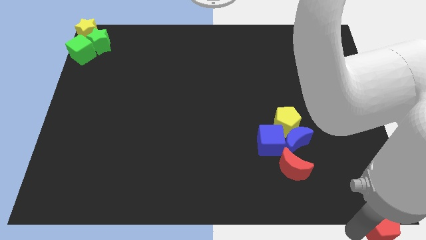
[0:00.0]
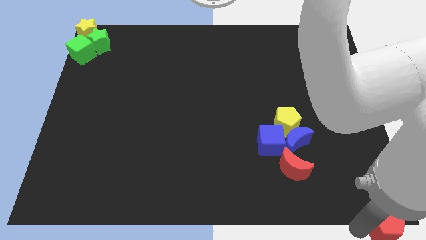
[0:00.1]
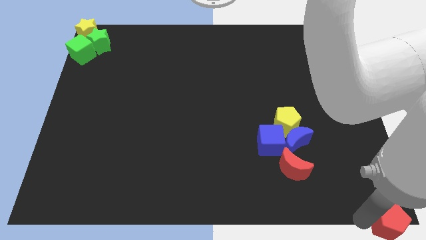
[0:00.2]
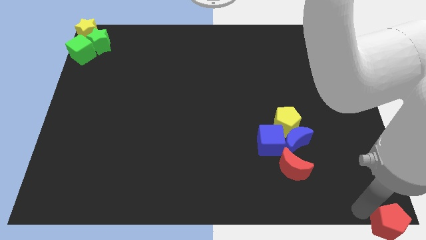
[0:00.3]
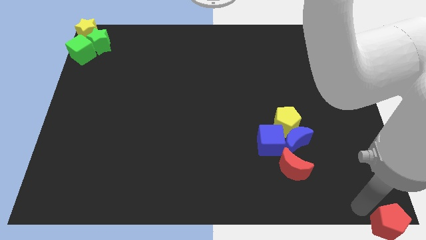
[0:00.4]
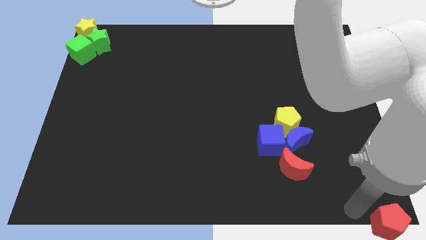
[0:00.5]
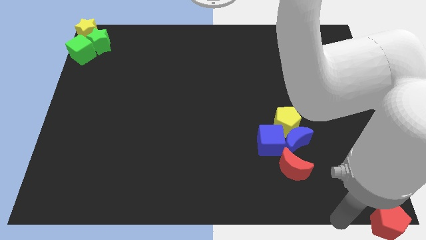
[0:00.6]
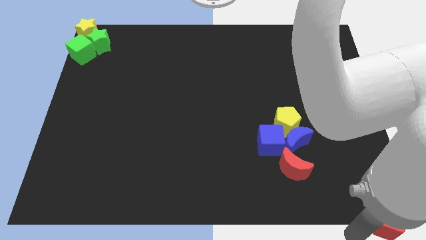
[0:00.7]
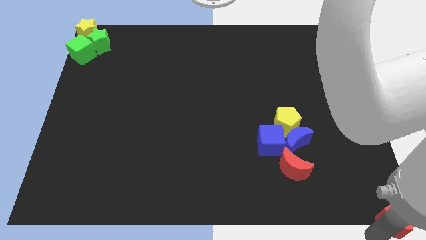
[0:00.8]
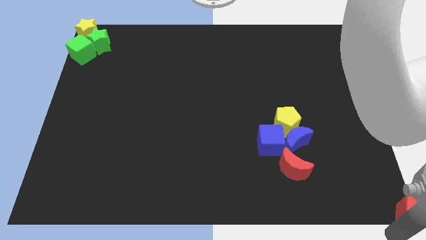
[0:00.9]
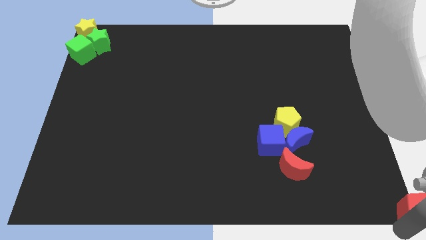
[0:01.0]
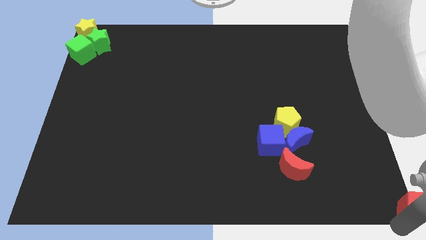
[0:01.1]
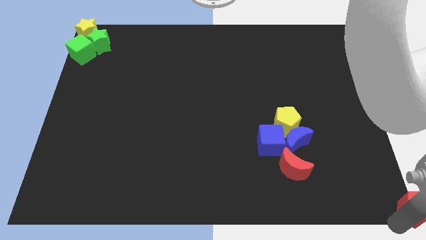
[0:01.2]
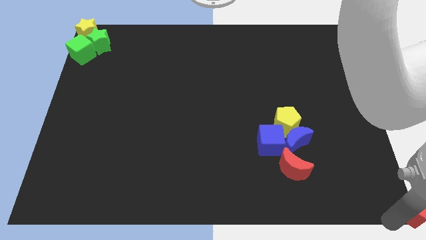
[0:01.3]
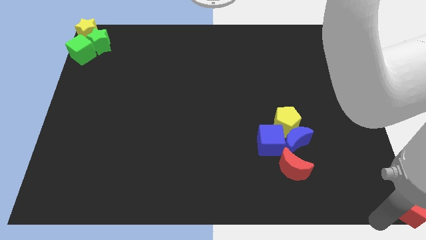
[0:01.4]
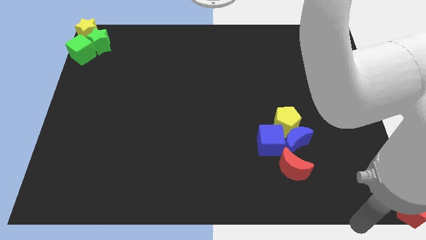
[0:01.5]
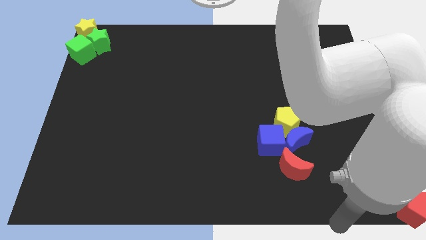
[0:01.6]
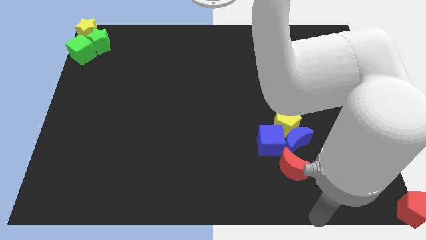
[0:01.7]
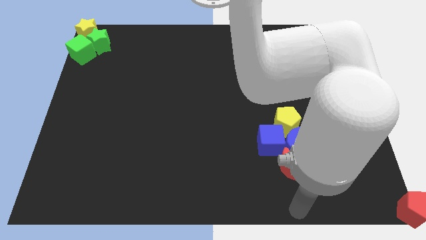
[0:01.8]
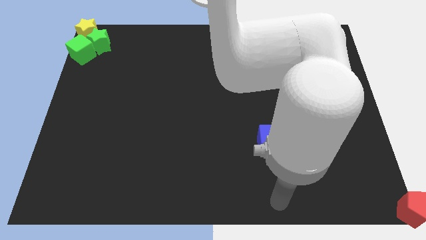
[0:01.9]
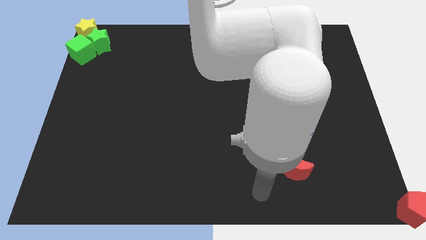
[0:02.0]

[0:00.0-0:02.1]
place the red pentagon at the bottom right side corner

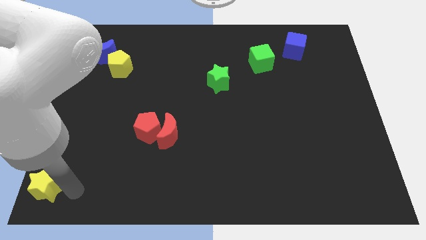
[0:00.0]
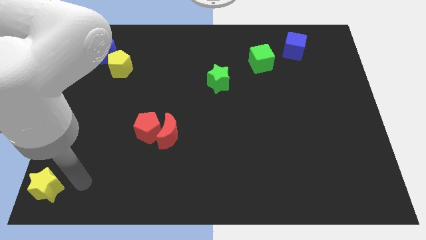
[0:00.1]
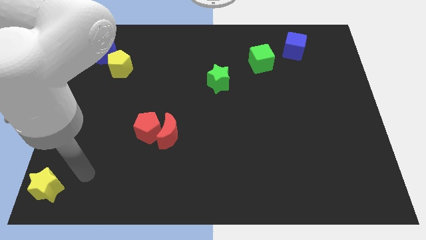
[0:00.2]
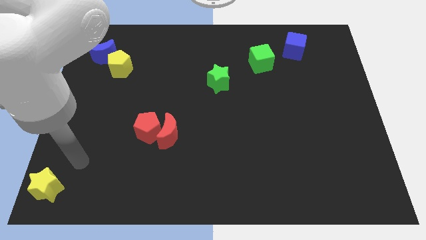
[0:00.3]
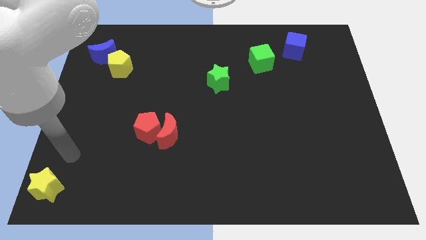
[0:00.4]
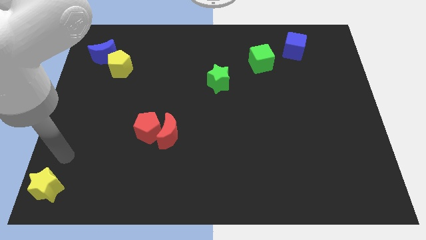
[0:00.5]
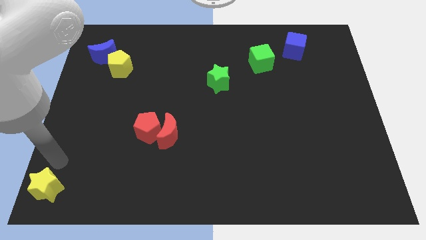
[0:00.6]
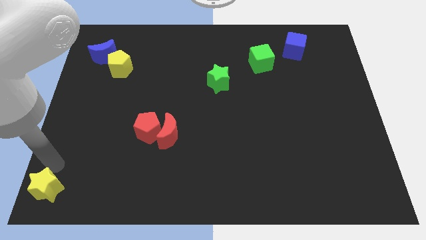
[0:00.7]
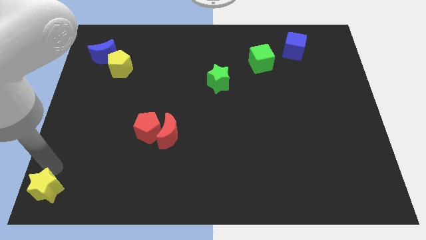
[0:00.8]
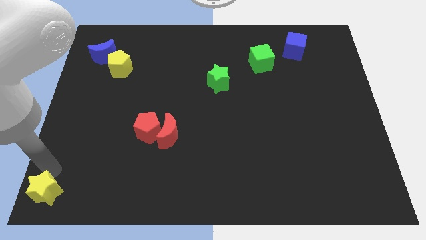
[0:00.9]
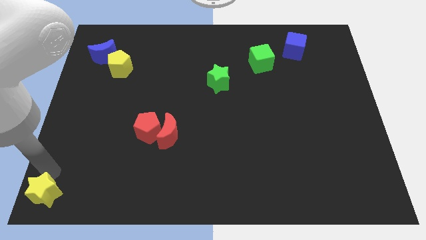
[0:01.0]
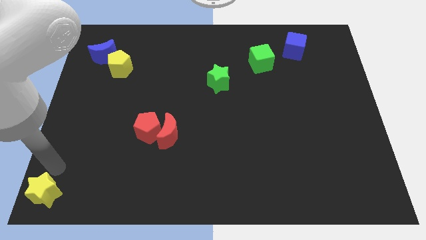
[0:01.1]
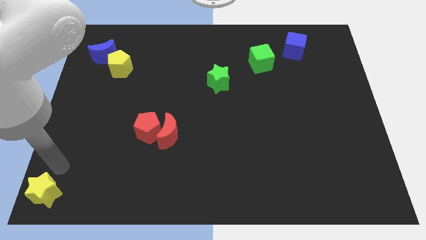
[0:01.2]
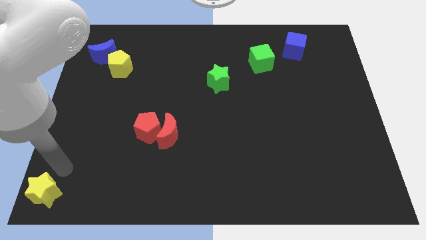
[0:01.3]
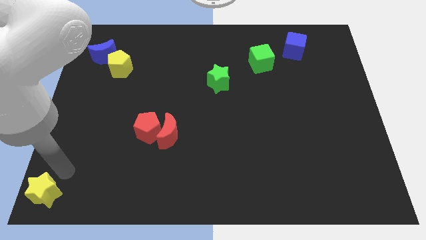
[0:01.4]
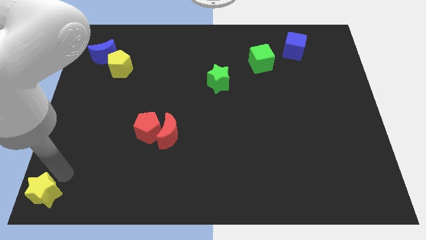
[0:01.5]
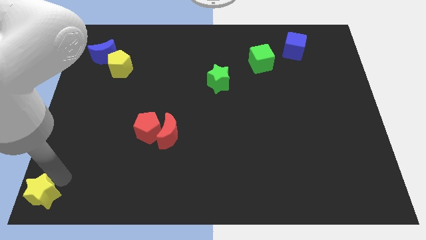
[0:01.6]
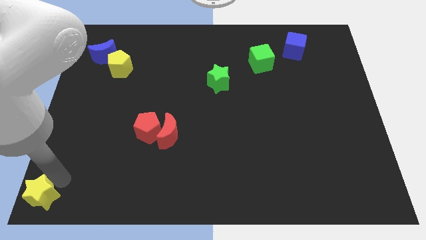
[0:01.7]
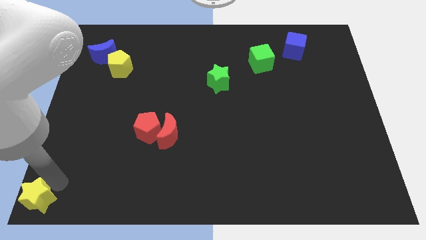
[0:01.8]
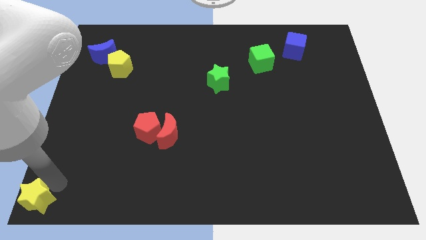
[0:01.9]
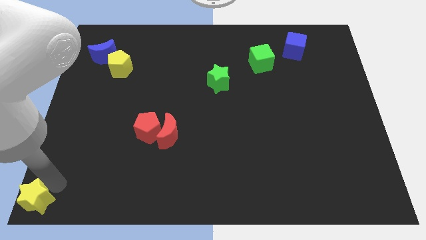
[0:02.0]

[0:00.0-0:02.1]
slide yellow star to the bottom left corner

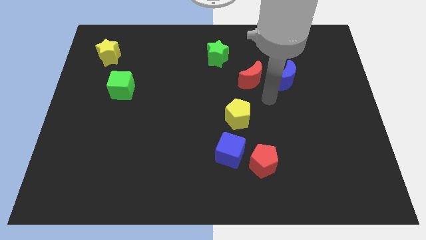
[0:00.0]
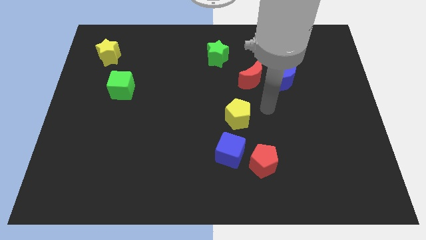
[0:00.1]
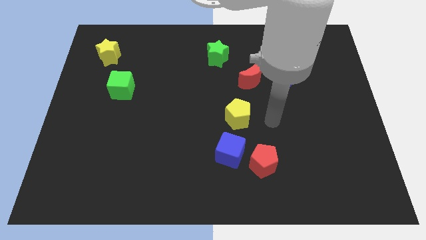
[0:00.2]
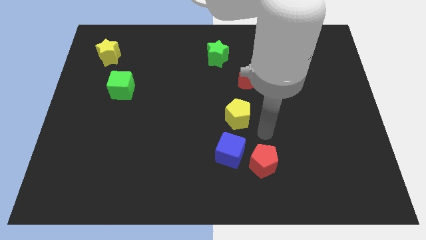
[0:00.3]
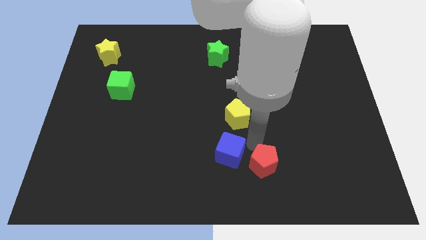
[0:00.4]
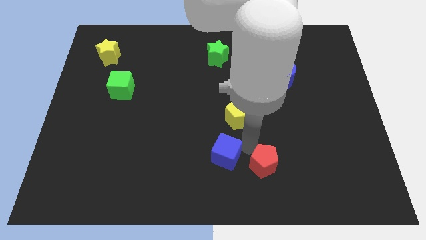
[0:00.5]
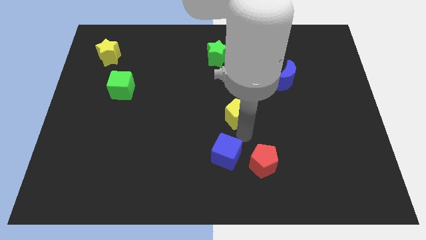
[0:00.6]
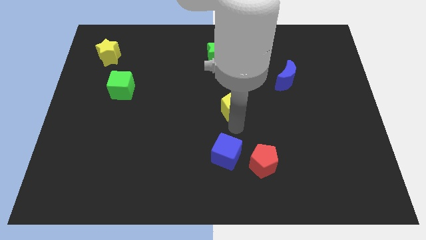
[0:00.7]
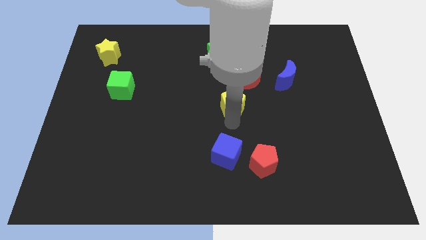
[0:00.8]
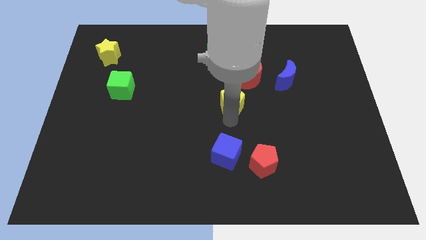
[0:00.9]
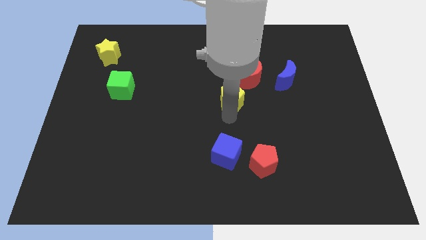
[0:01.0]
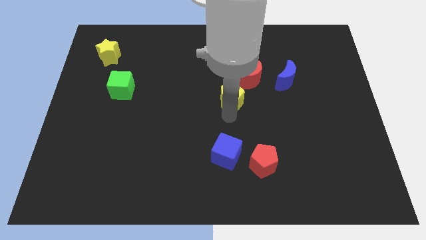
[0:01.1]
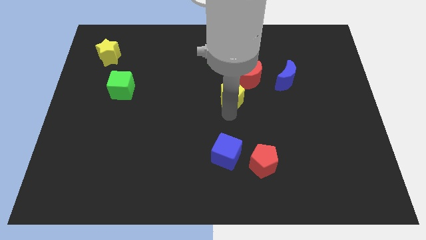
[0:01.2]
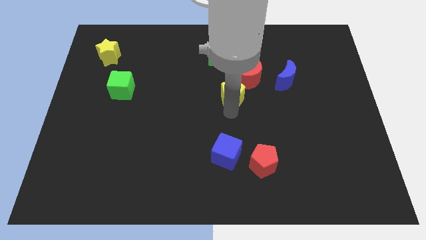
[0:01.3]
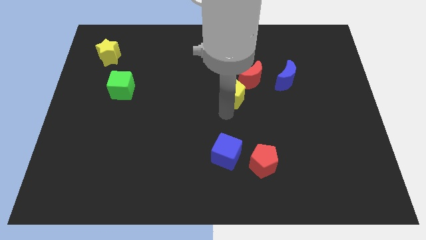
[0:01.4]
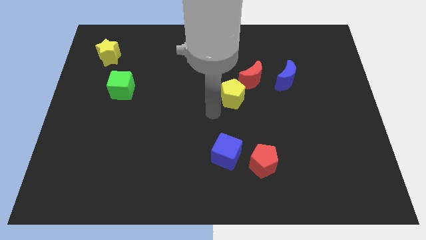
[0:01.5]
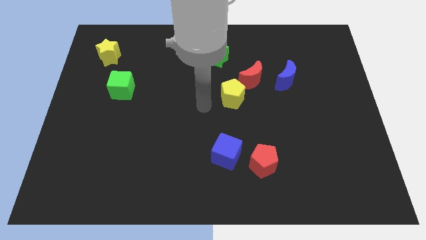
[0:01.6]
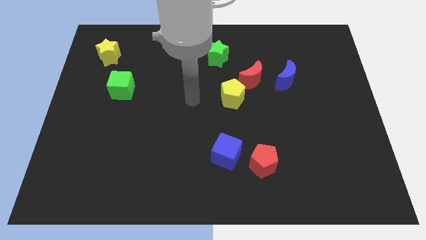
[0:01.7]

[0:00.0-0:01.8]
push yellow pentagon towards the red crescent

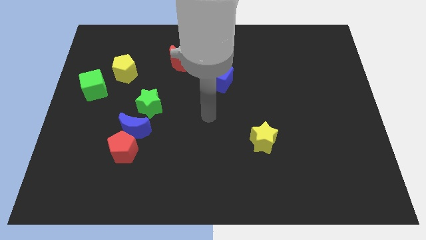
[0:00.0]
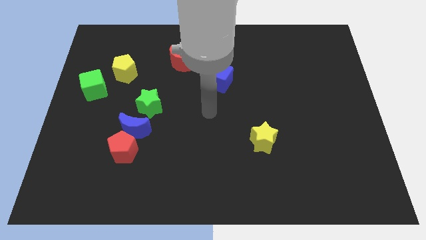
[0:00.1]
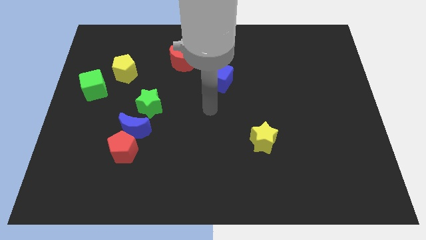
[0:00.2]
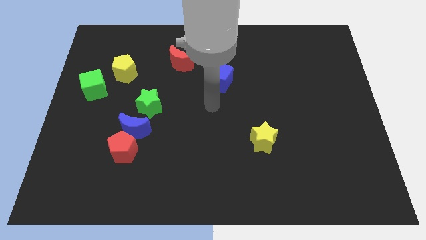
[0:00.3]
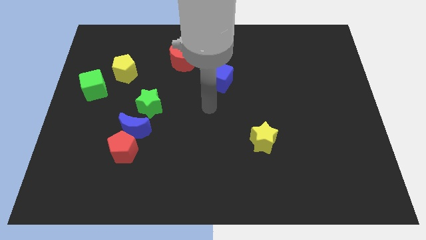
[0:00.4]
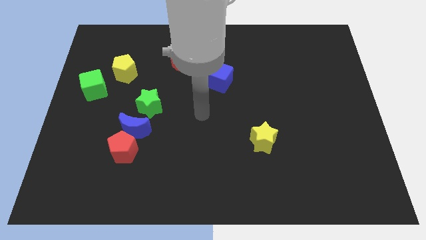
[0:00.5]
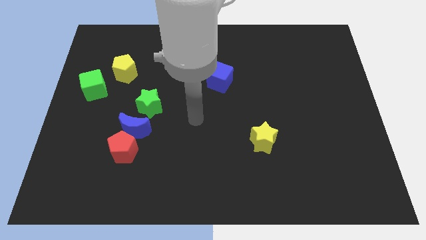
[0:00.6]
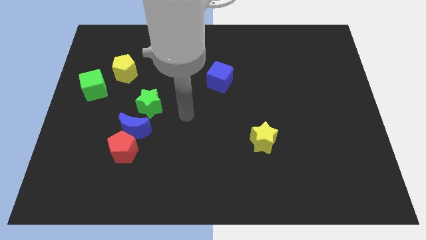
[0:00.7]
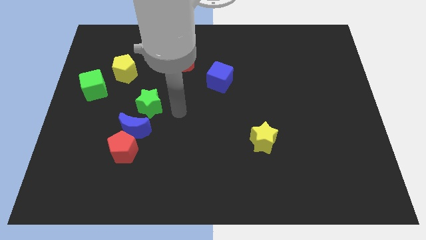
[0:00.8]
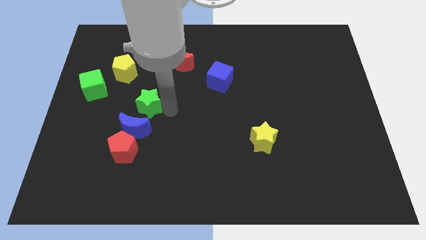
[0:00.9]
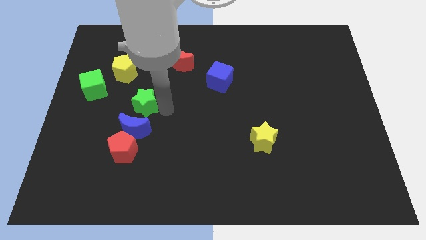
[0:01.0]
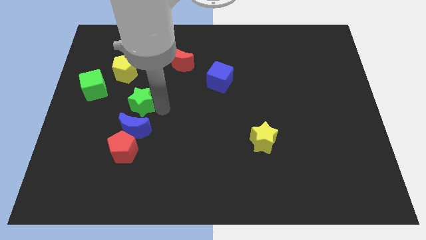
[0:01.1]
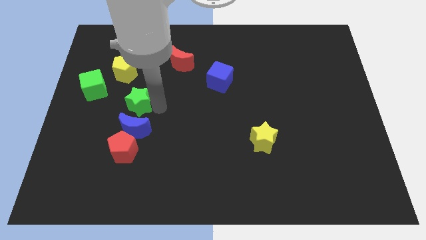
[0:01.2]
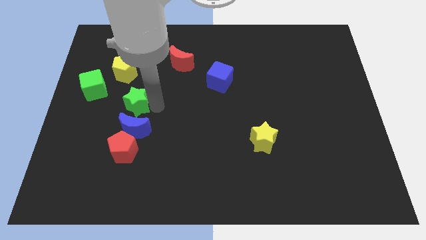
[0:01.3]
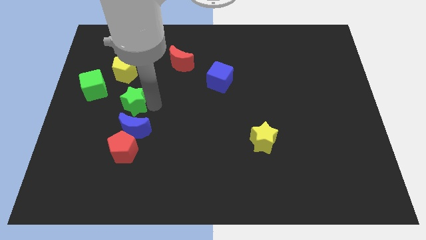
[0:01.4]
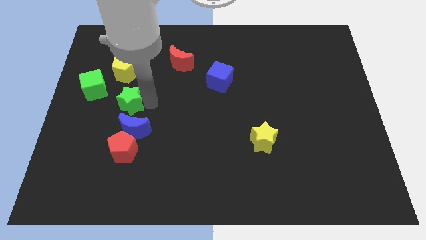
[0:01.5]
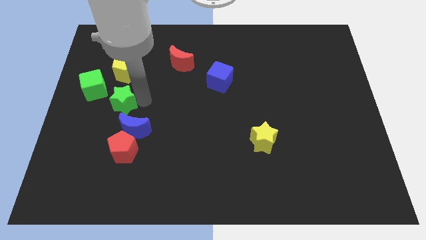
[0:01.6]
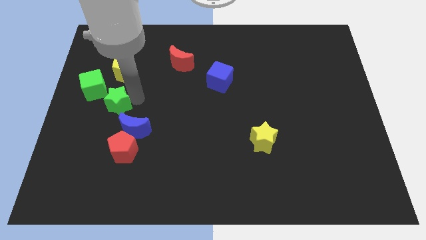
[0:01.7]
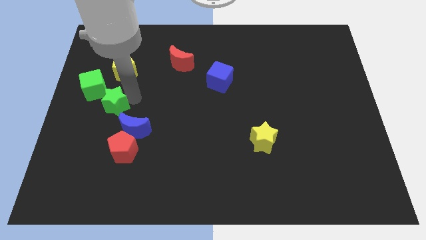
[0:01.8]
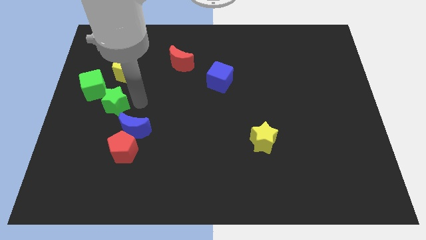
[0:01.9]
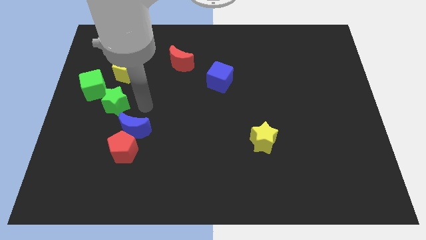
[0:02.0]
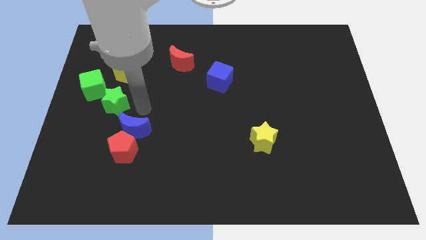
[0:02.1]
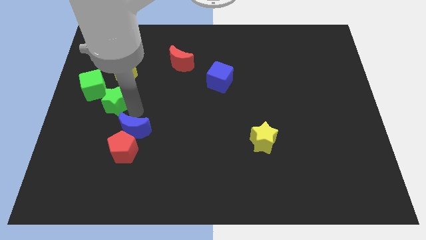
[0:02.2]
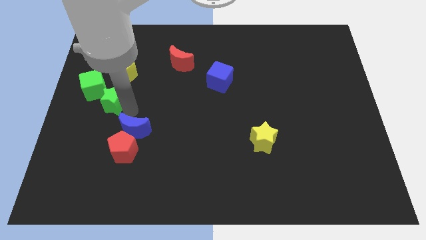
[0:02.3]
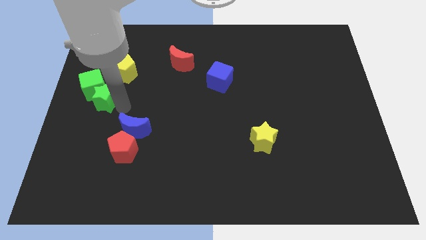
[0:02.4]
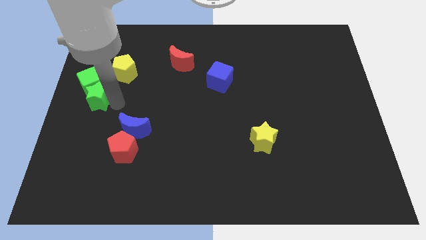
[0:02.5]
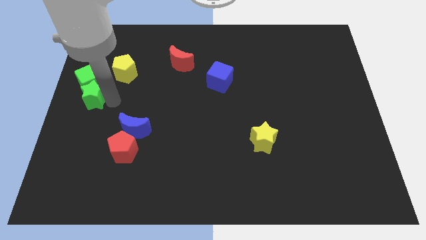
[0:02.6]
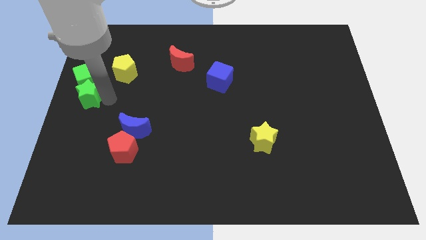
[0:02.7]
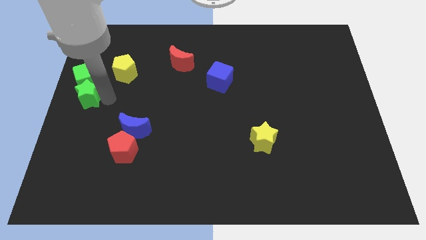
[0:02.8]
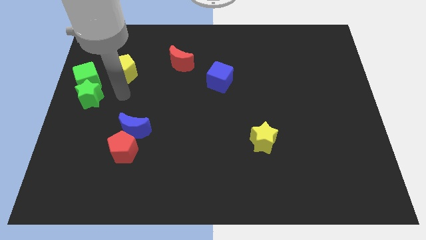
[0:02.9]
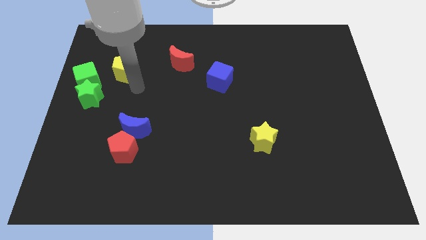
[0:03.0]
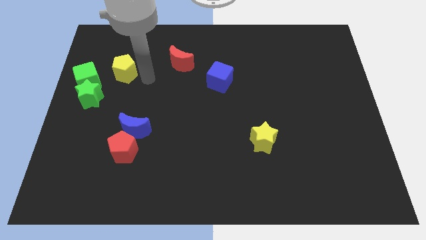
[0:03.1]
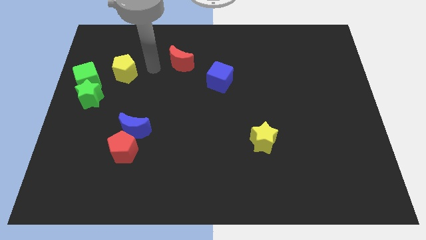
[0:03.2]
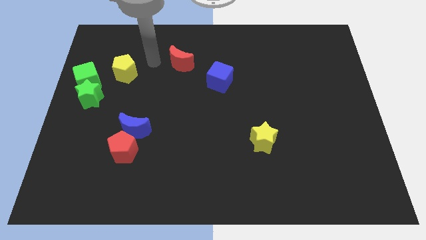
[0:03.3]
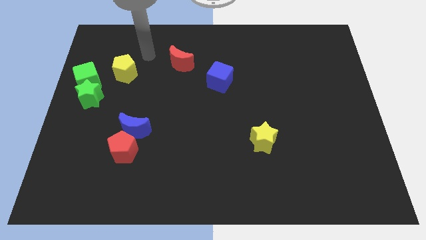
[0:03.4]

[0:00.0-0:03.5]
push the green star into the green cube
